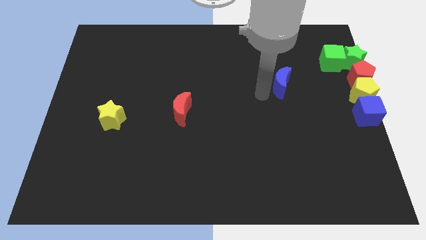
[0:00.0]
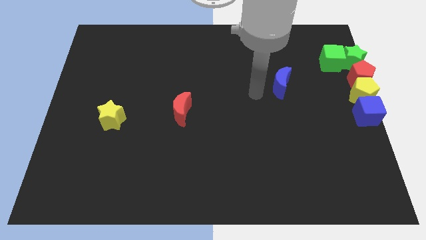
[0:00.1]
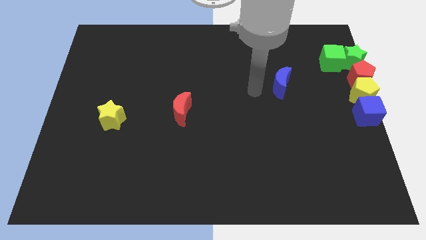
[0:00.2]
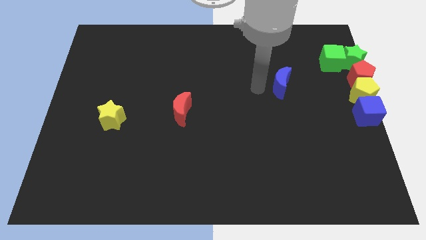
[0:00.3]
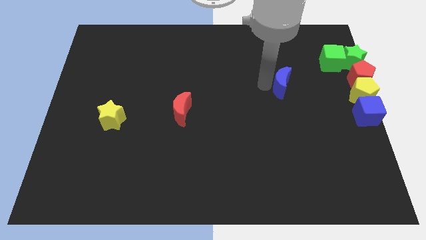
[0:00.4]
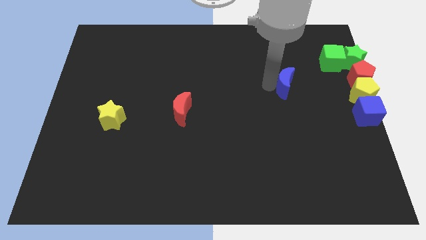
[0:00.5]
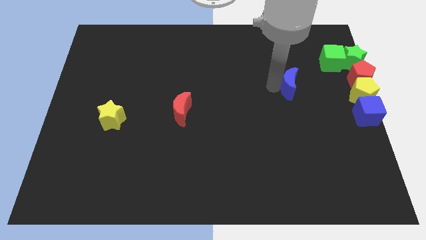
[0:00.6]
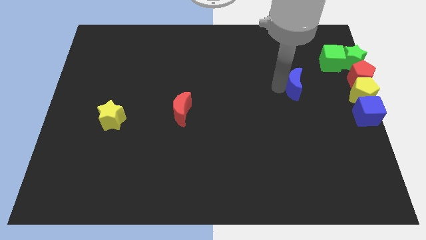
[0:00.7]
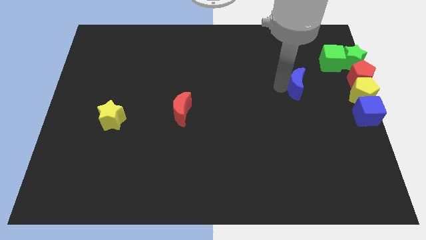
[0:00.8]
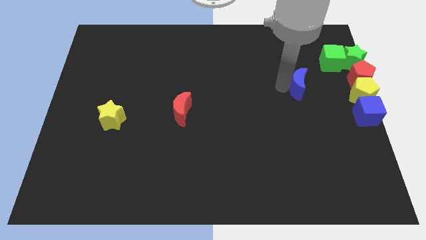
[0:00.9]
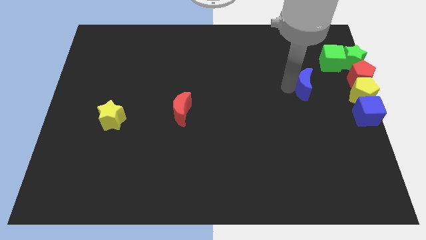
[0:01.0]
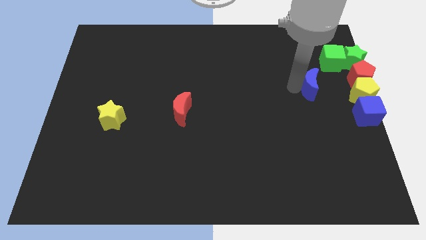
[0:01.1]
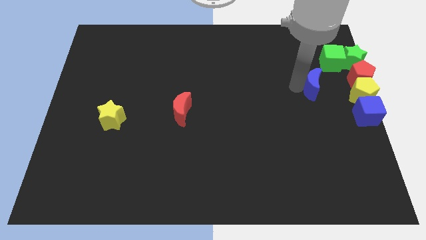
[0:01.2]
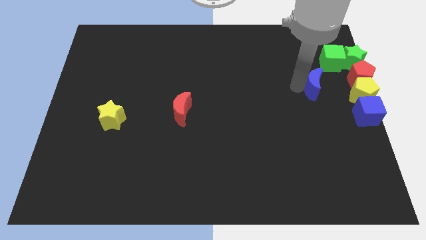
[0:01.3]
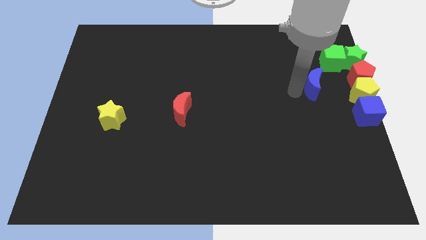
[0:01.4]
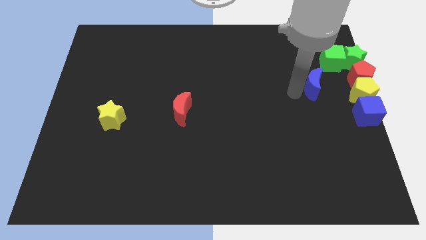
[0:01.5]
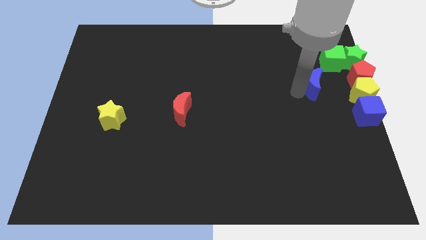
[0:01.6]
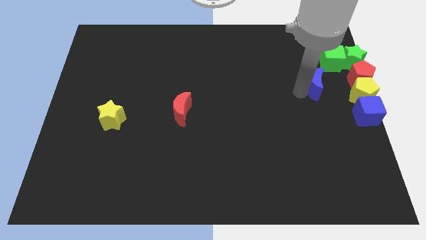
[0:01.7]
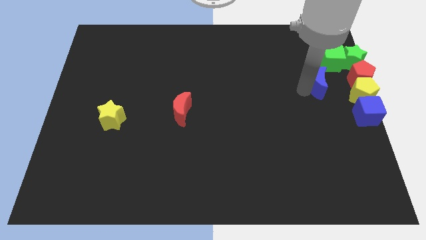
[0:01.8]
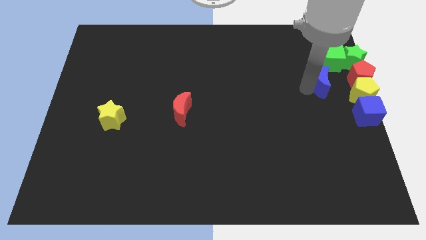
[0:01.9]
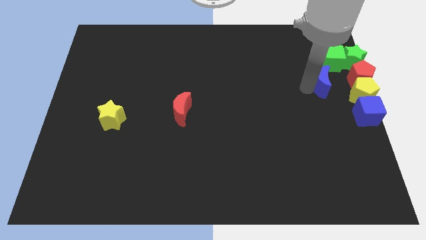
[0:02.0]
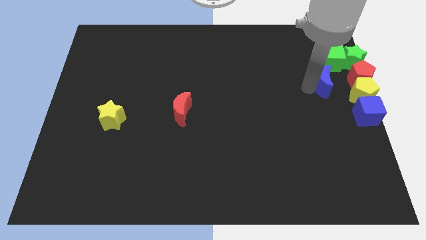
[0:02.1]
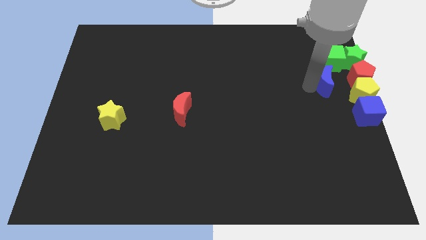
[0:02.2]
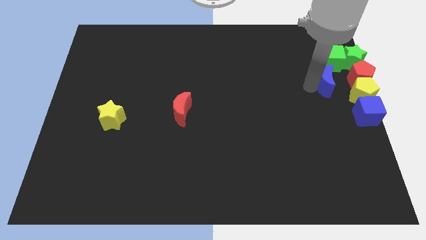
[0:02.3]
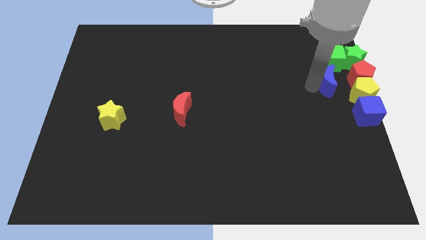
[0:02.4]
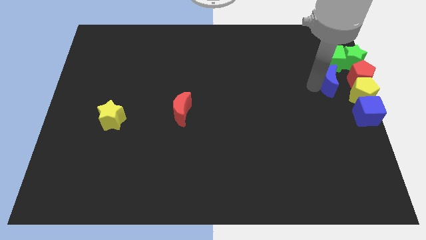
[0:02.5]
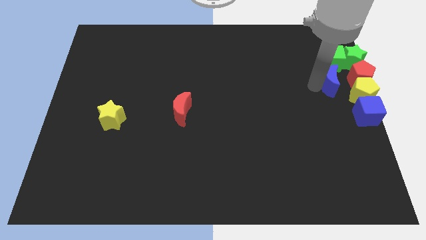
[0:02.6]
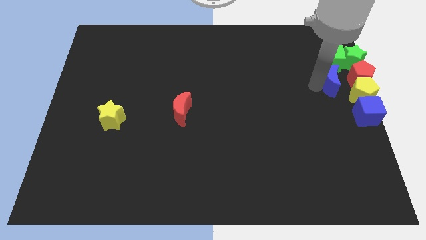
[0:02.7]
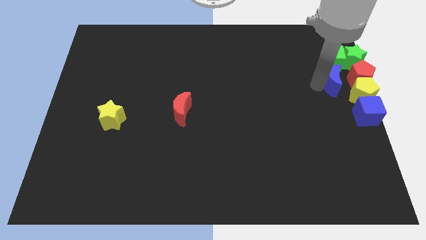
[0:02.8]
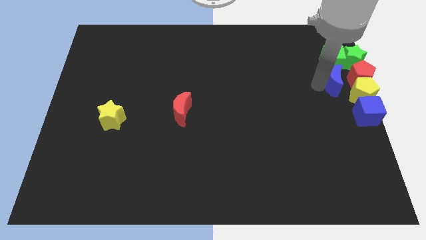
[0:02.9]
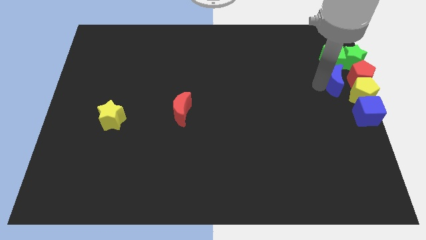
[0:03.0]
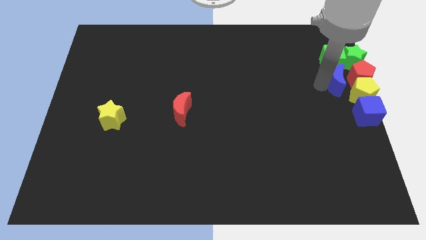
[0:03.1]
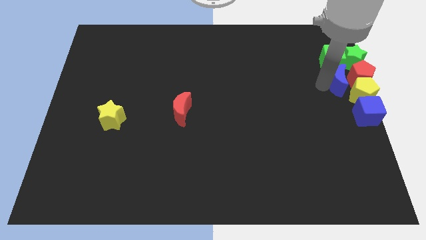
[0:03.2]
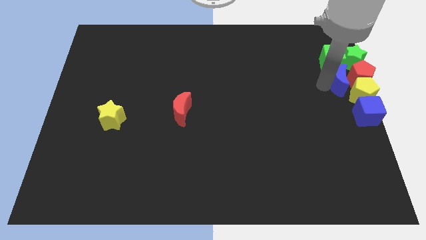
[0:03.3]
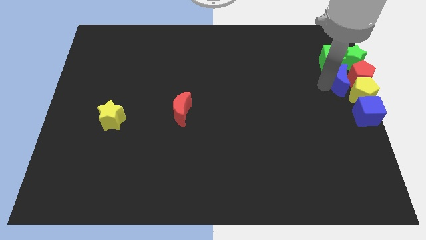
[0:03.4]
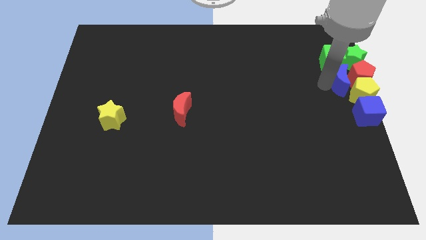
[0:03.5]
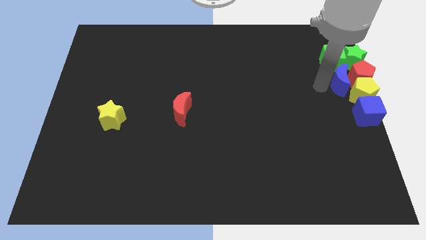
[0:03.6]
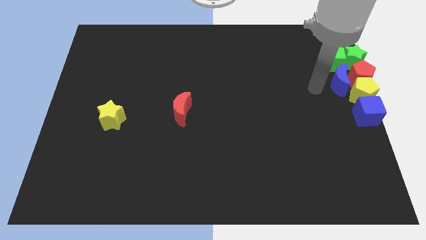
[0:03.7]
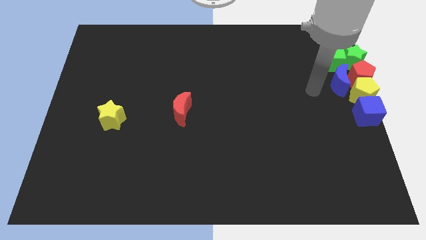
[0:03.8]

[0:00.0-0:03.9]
place the blue moon close to the left side of the red pentagon

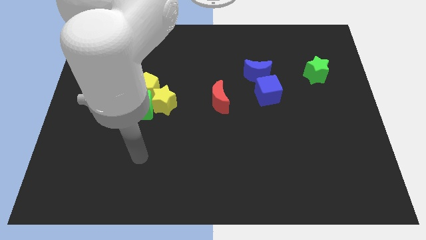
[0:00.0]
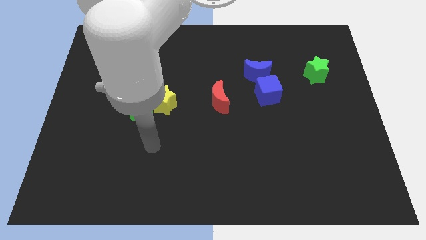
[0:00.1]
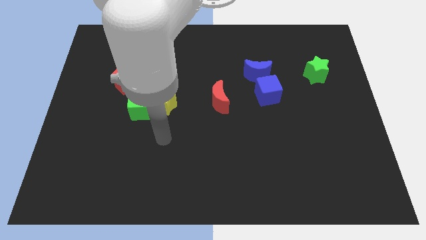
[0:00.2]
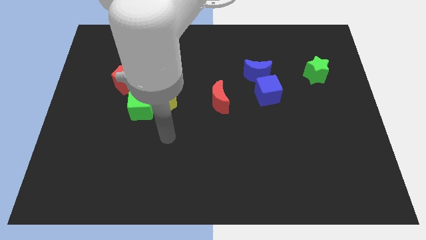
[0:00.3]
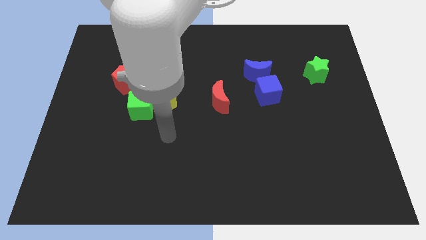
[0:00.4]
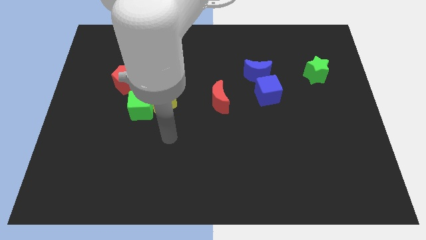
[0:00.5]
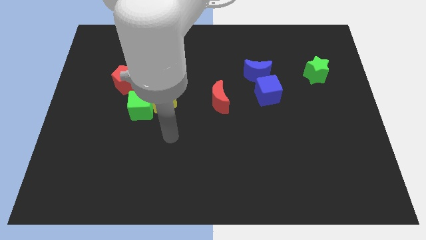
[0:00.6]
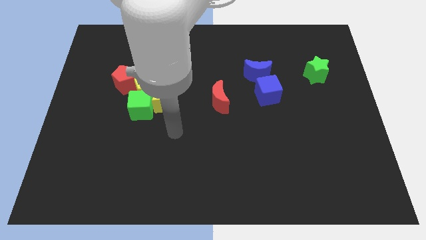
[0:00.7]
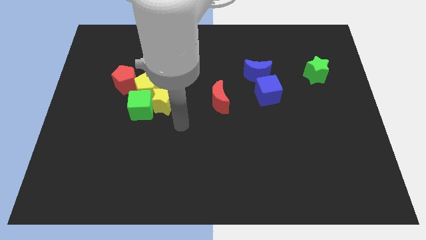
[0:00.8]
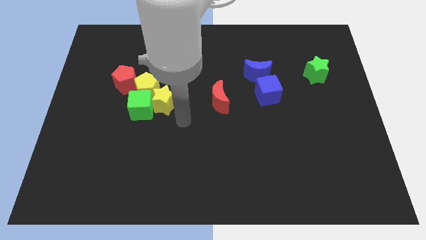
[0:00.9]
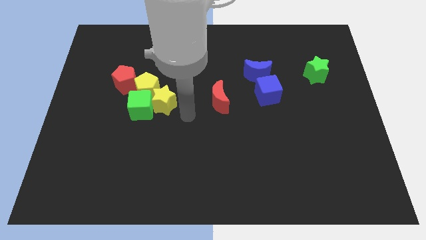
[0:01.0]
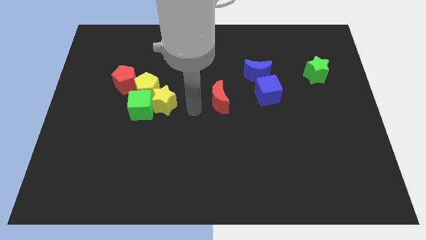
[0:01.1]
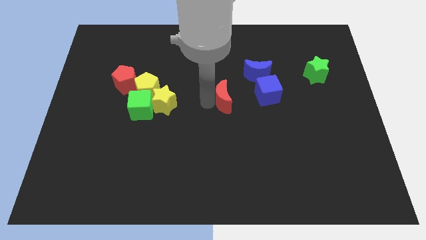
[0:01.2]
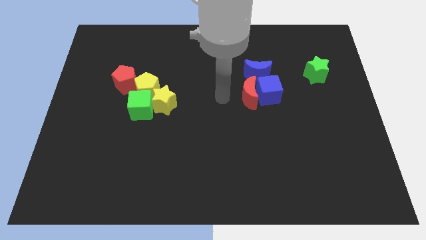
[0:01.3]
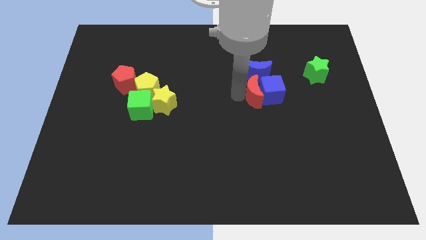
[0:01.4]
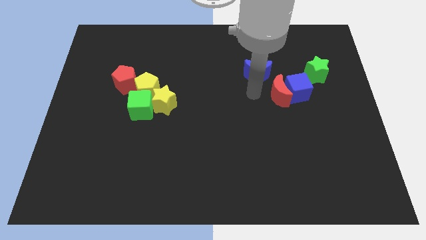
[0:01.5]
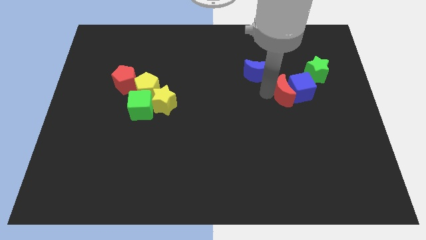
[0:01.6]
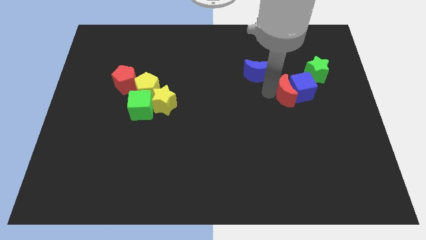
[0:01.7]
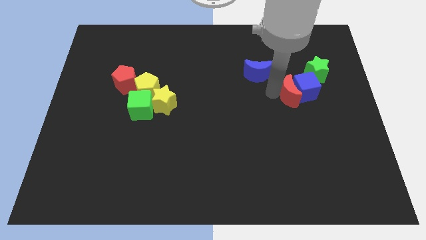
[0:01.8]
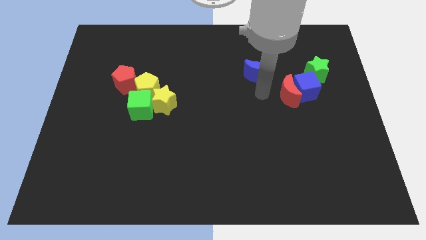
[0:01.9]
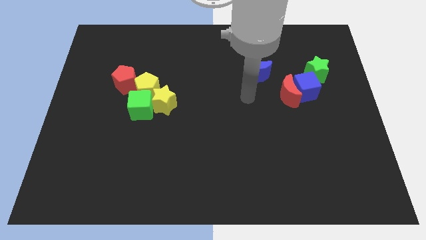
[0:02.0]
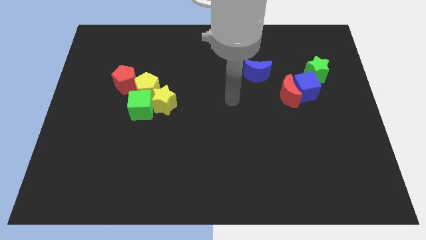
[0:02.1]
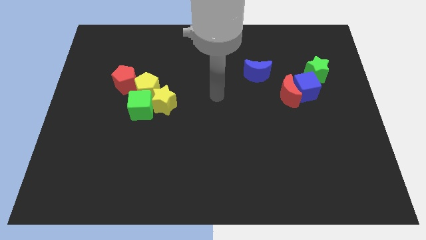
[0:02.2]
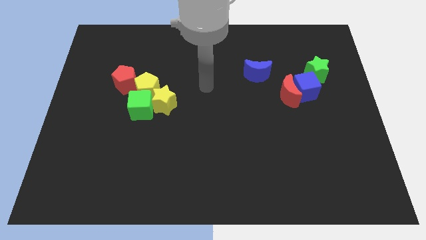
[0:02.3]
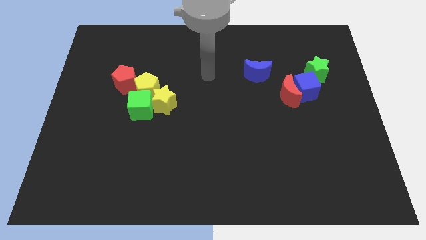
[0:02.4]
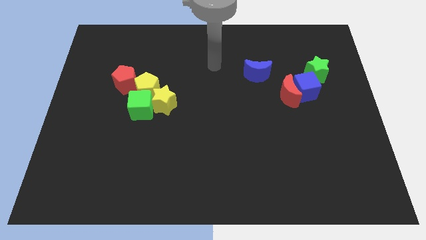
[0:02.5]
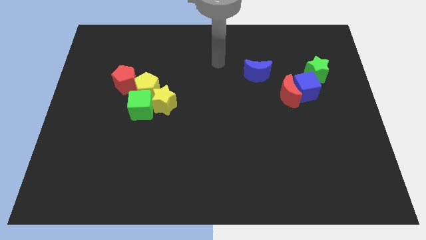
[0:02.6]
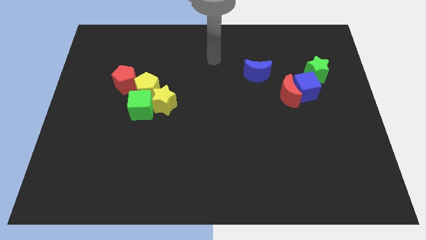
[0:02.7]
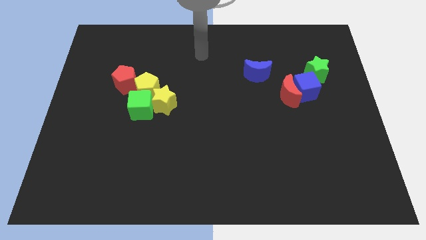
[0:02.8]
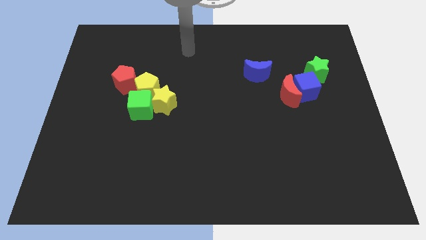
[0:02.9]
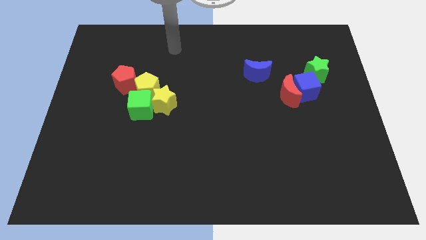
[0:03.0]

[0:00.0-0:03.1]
push the blue cube and red moon to the right side of the board

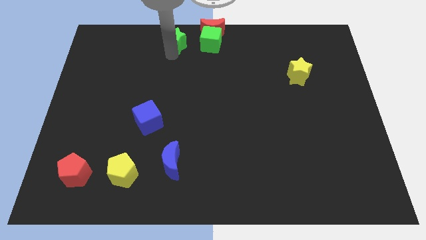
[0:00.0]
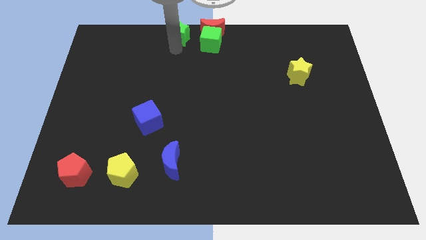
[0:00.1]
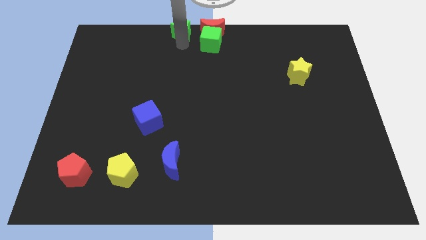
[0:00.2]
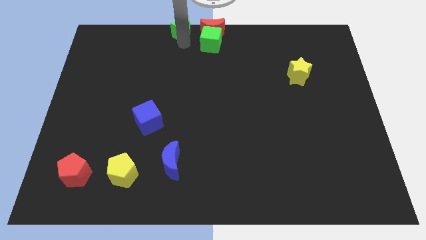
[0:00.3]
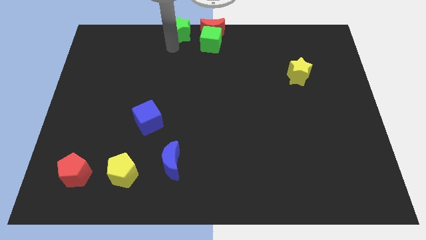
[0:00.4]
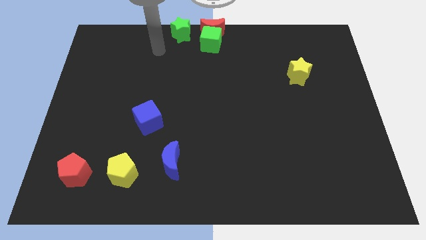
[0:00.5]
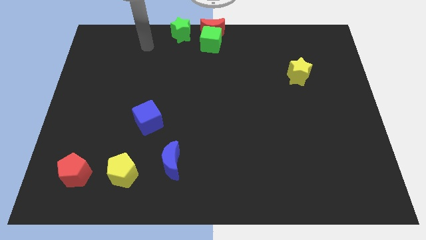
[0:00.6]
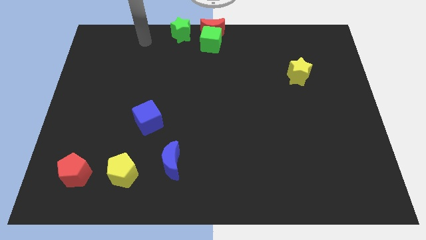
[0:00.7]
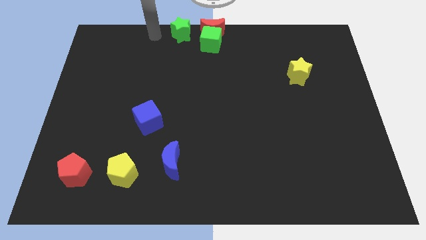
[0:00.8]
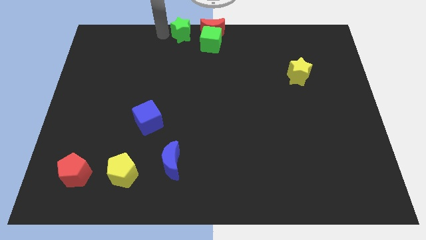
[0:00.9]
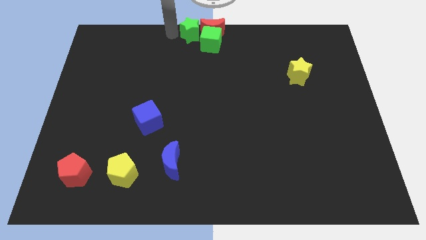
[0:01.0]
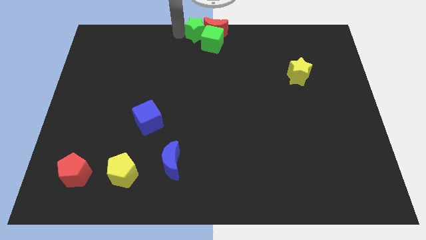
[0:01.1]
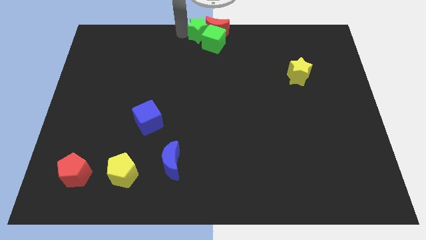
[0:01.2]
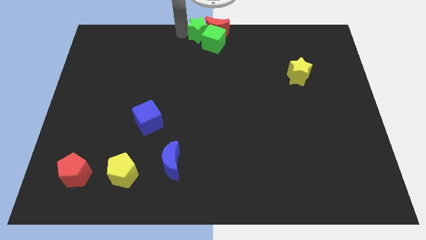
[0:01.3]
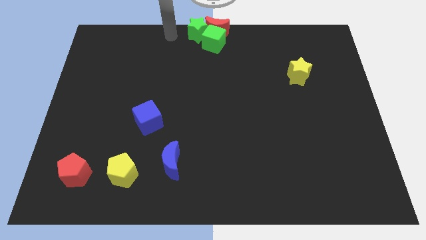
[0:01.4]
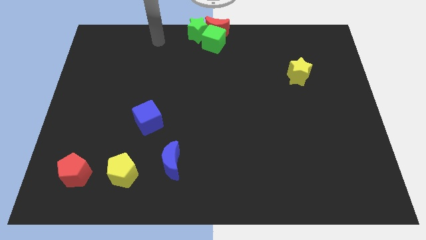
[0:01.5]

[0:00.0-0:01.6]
push the green star into the group of blocks

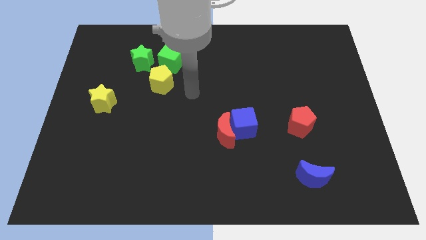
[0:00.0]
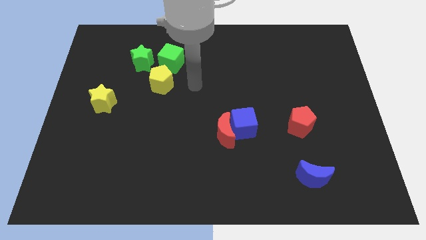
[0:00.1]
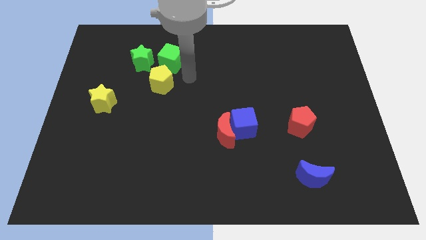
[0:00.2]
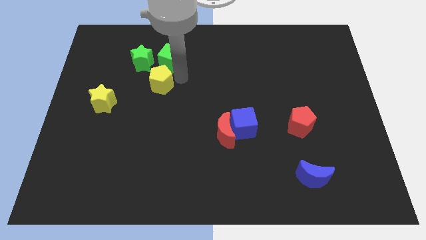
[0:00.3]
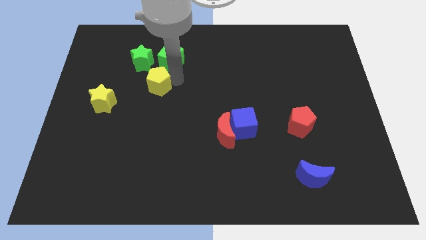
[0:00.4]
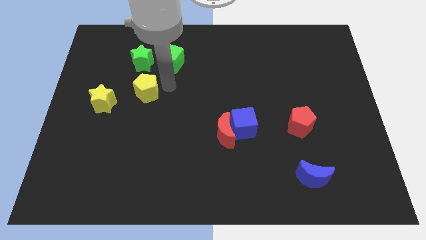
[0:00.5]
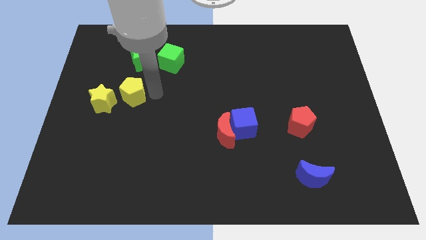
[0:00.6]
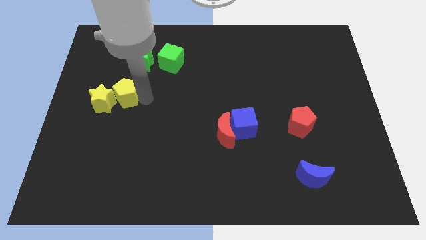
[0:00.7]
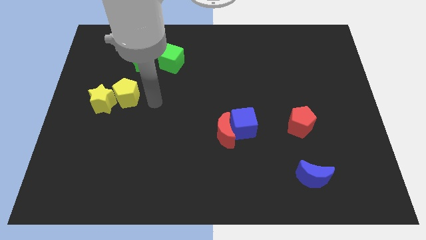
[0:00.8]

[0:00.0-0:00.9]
place the yellow pentagon close to the yellow star
